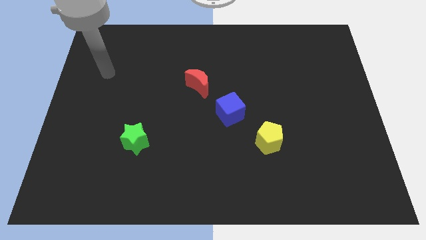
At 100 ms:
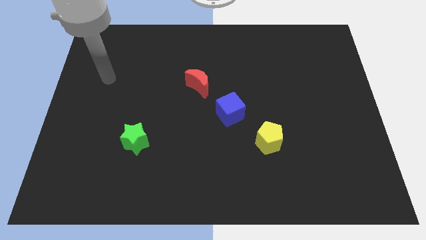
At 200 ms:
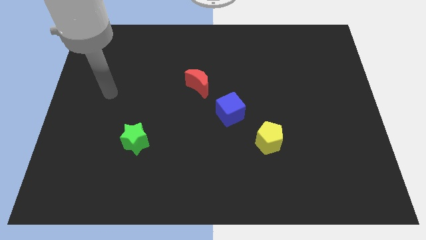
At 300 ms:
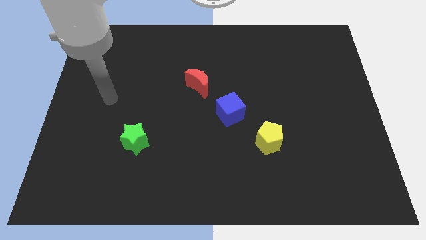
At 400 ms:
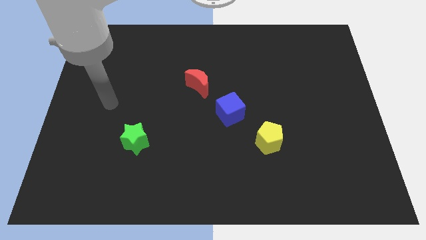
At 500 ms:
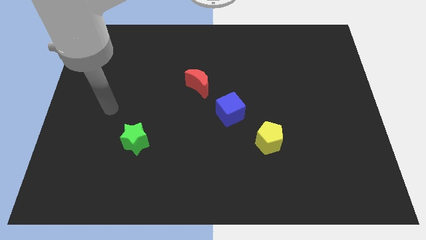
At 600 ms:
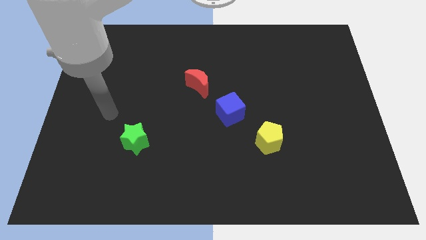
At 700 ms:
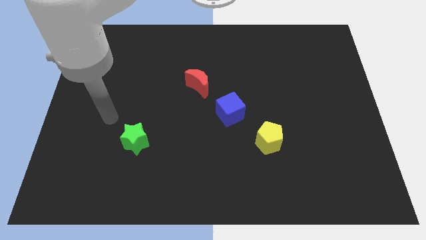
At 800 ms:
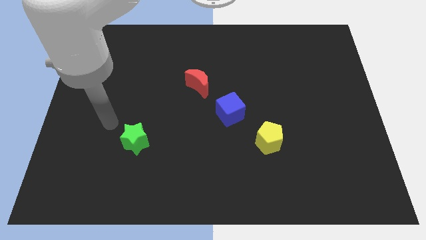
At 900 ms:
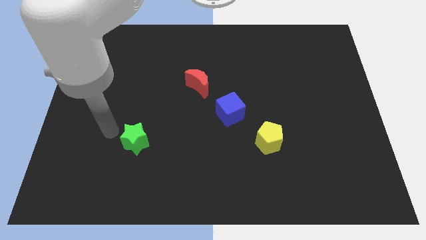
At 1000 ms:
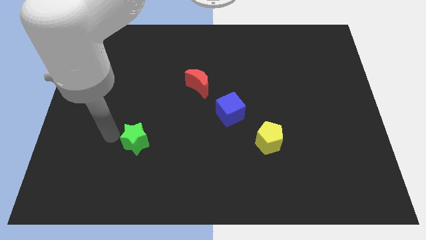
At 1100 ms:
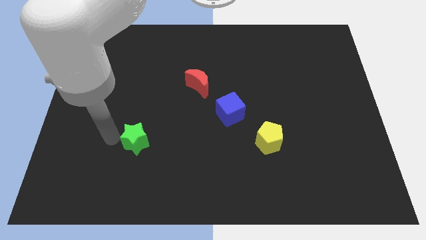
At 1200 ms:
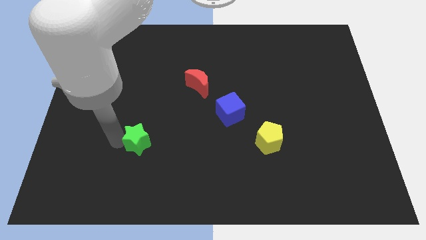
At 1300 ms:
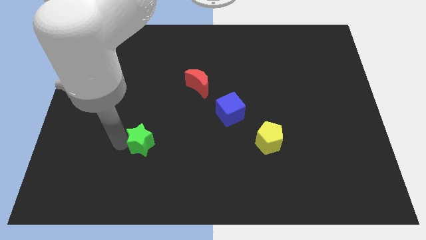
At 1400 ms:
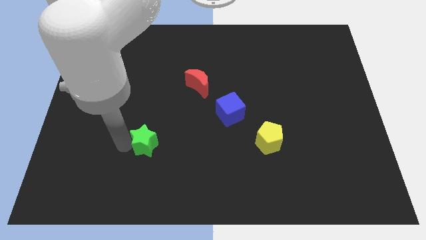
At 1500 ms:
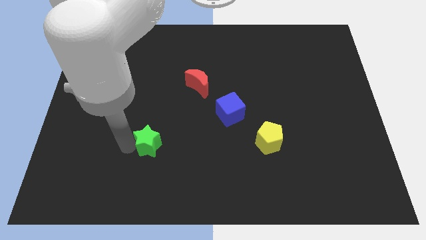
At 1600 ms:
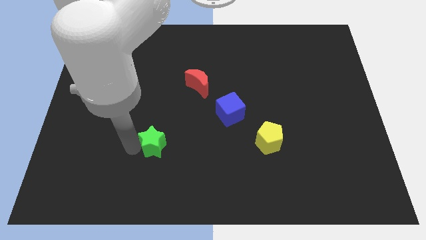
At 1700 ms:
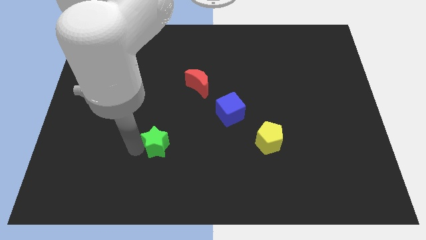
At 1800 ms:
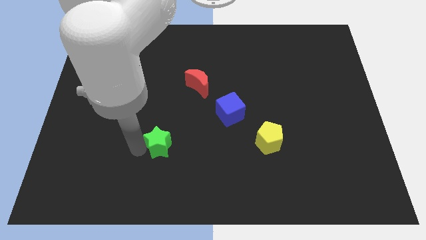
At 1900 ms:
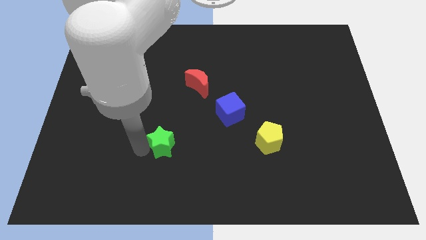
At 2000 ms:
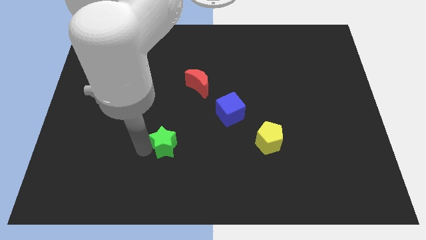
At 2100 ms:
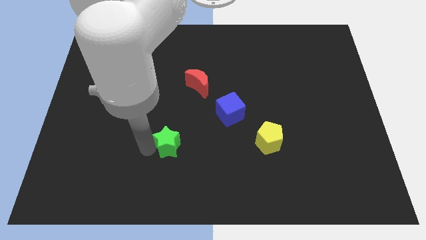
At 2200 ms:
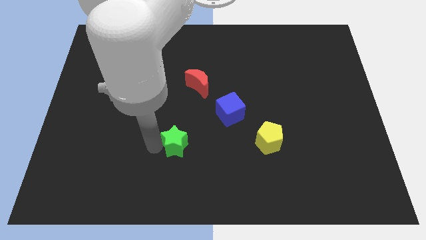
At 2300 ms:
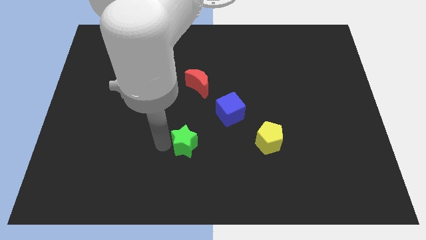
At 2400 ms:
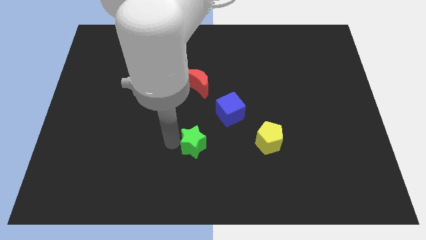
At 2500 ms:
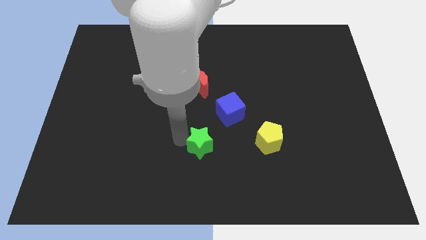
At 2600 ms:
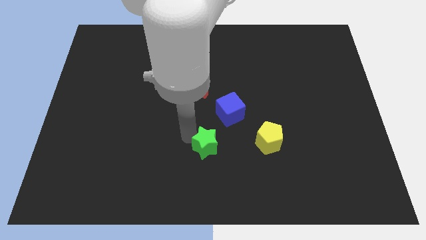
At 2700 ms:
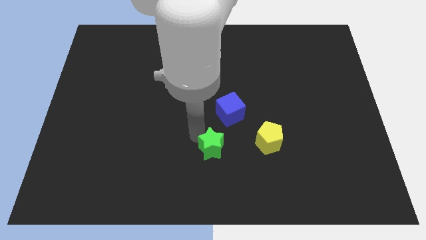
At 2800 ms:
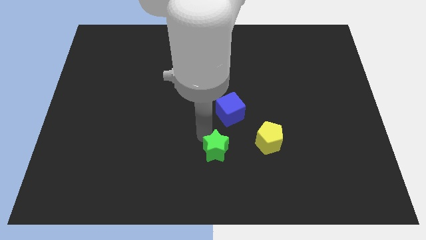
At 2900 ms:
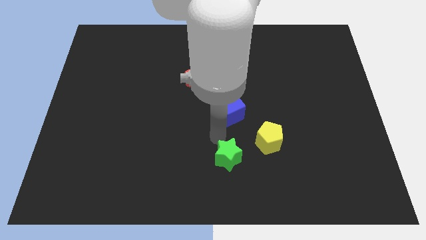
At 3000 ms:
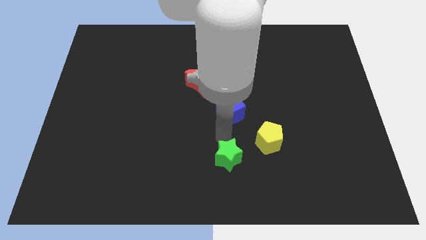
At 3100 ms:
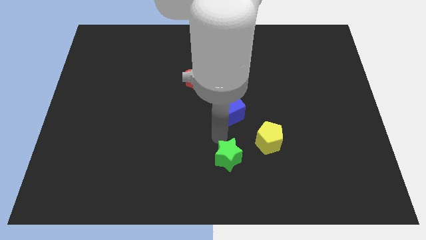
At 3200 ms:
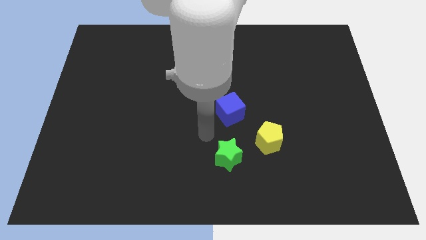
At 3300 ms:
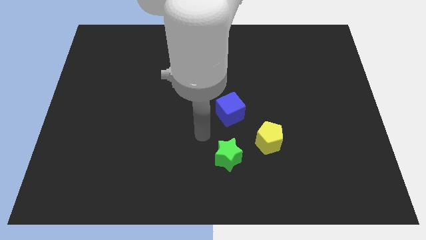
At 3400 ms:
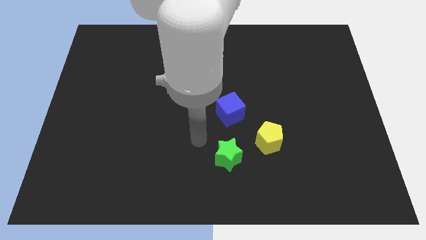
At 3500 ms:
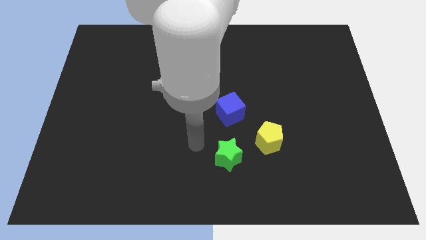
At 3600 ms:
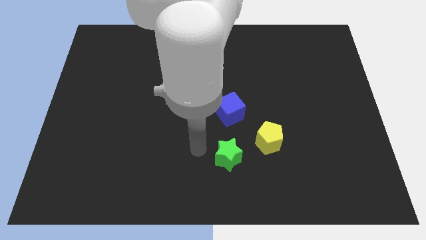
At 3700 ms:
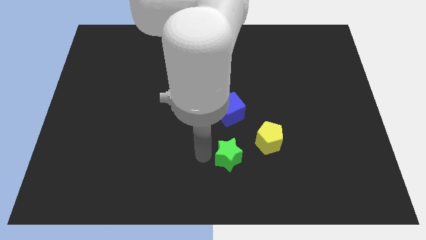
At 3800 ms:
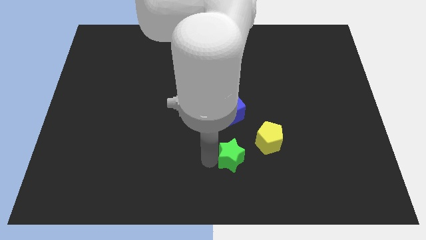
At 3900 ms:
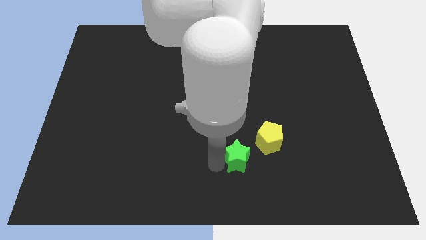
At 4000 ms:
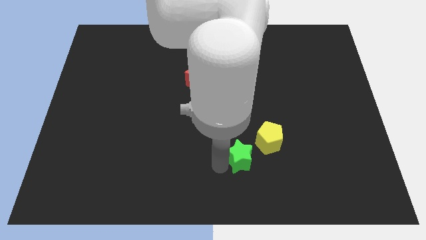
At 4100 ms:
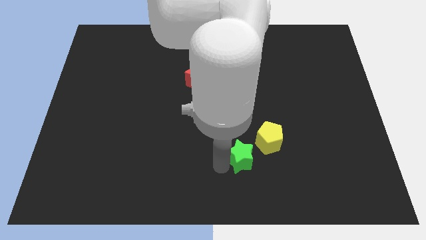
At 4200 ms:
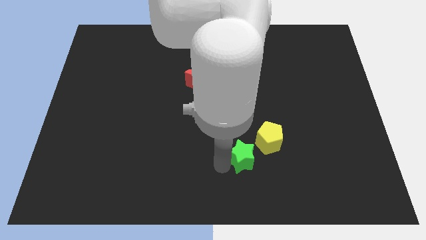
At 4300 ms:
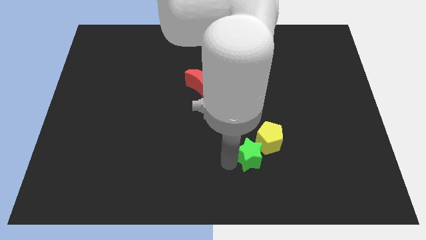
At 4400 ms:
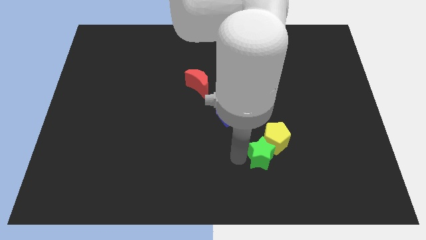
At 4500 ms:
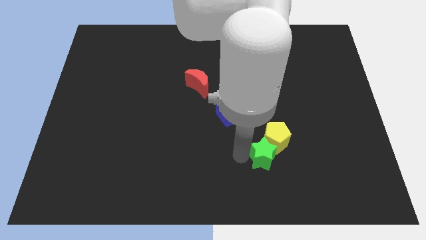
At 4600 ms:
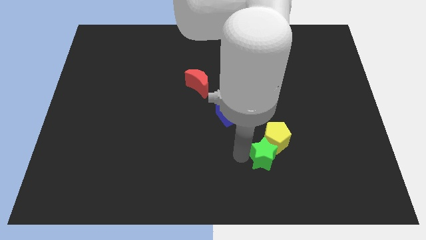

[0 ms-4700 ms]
move the star close to the yellow block

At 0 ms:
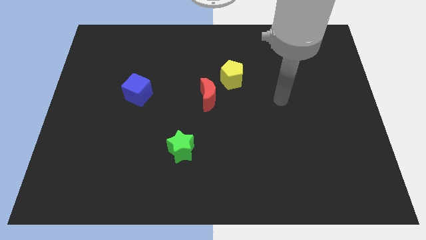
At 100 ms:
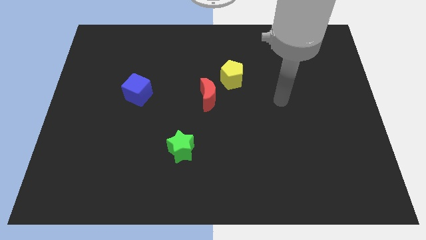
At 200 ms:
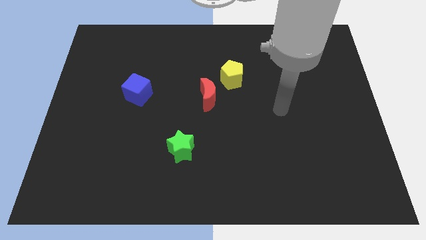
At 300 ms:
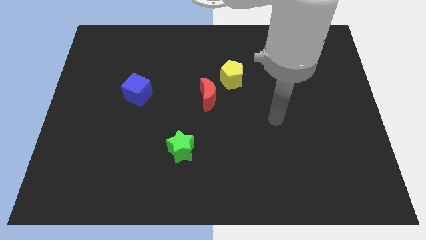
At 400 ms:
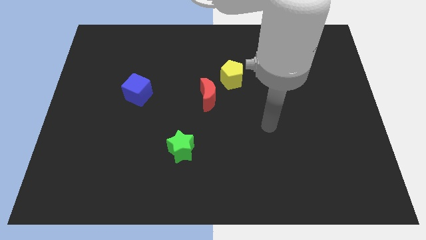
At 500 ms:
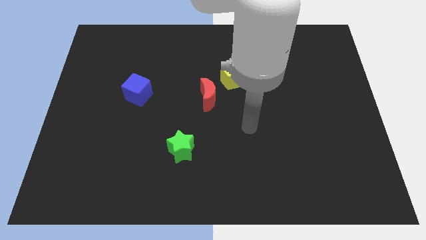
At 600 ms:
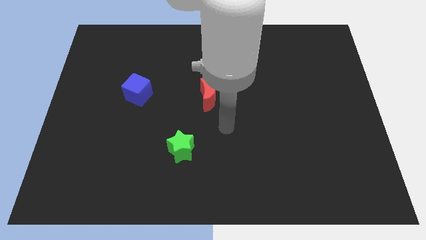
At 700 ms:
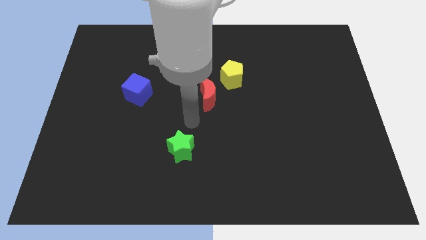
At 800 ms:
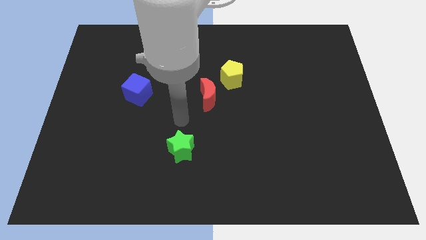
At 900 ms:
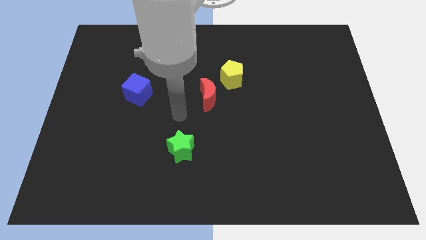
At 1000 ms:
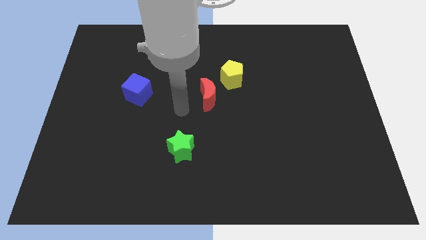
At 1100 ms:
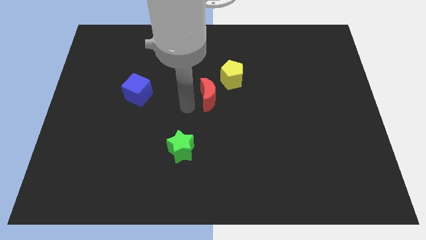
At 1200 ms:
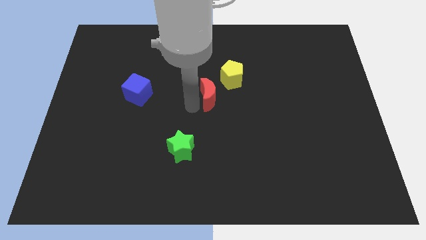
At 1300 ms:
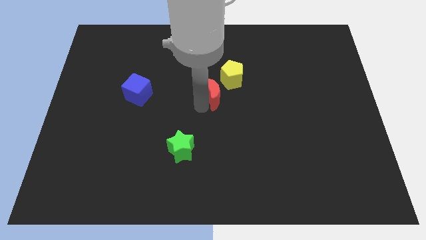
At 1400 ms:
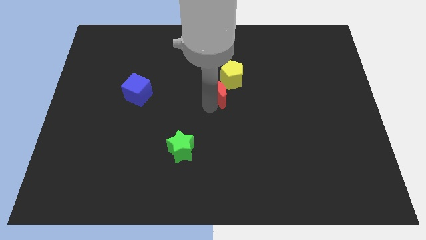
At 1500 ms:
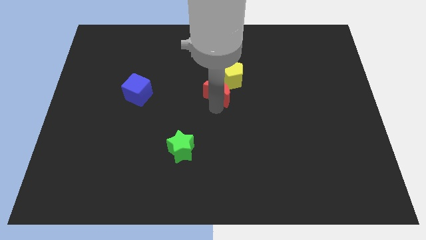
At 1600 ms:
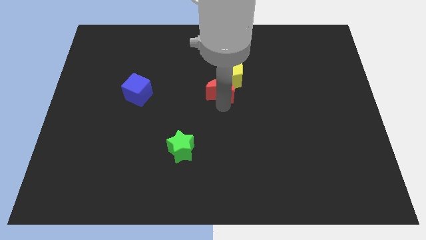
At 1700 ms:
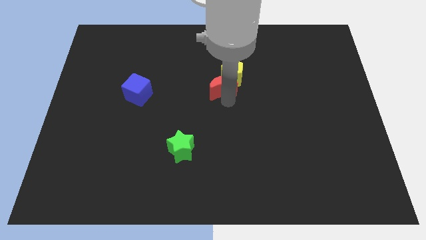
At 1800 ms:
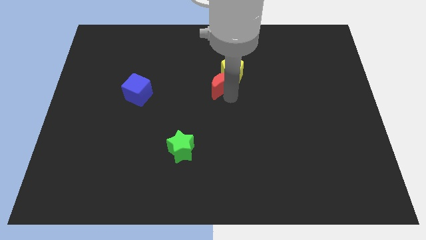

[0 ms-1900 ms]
put the moon to the yellow pentagon

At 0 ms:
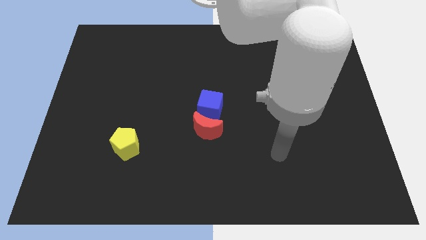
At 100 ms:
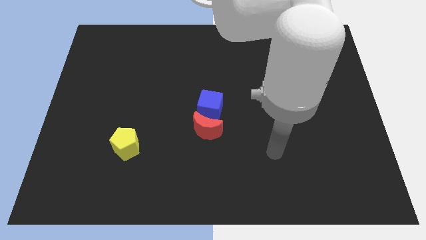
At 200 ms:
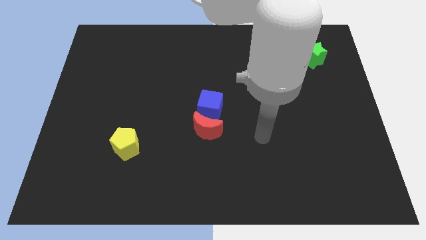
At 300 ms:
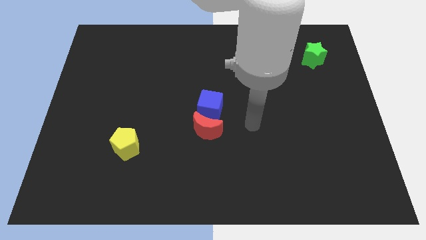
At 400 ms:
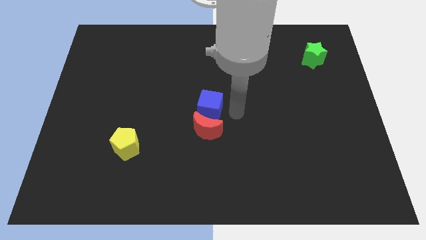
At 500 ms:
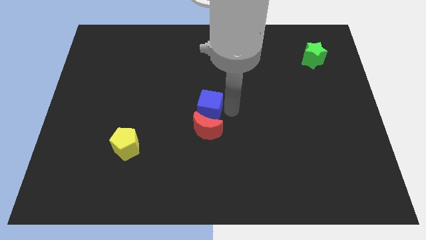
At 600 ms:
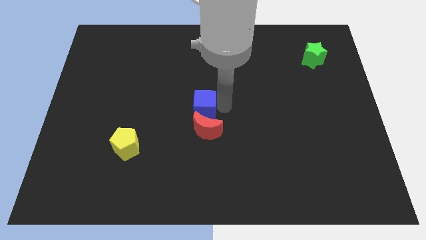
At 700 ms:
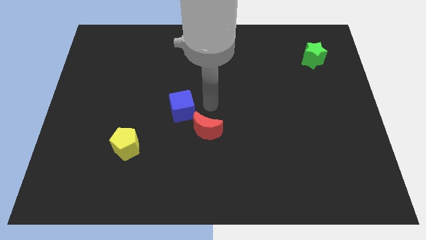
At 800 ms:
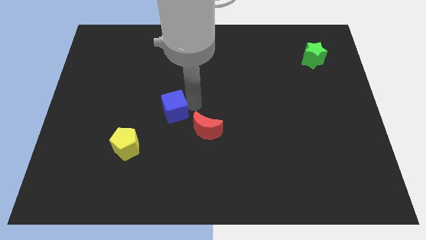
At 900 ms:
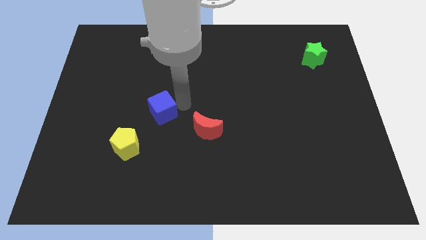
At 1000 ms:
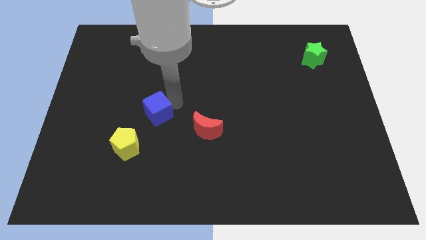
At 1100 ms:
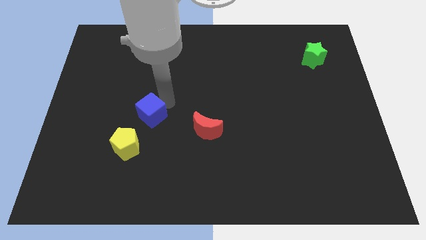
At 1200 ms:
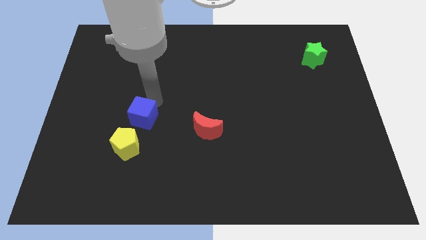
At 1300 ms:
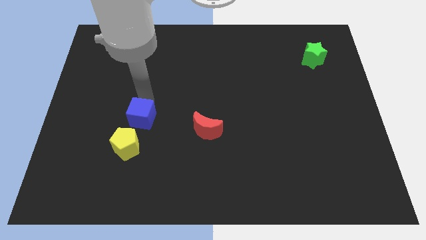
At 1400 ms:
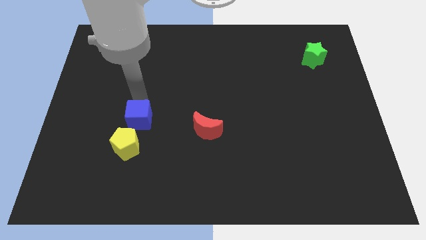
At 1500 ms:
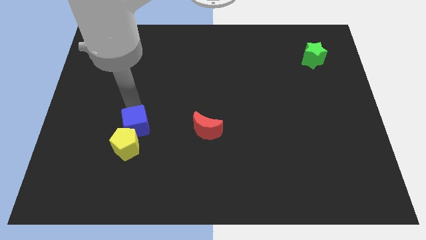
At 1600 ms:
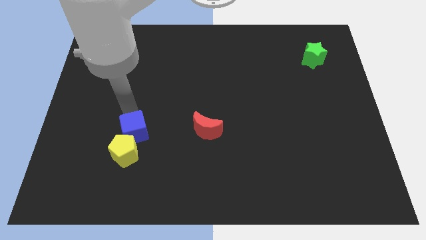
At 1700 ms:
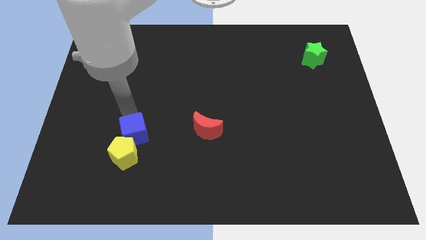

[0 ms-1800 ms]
slide the cube close to the yellow pentagon
